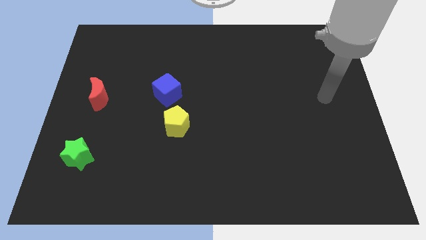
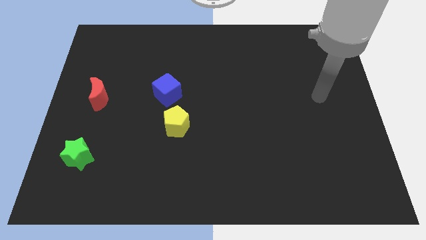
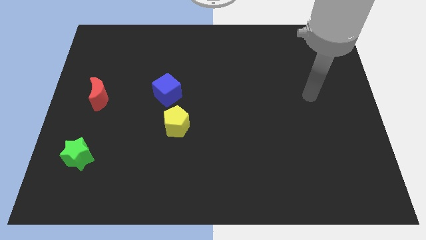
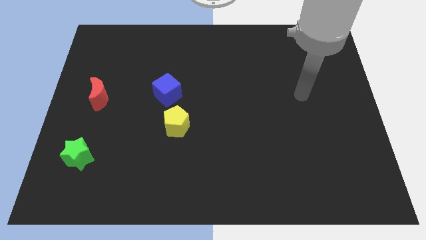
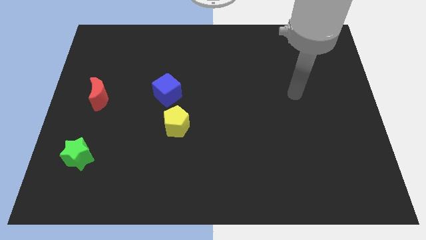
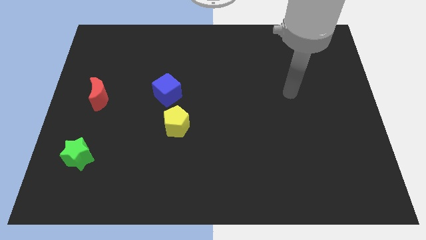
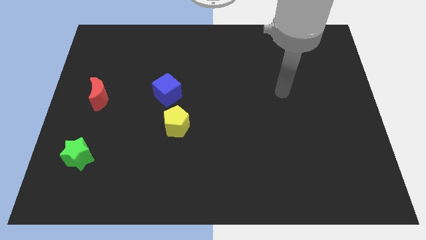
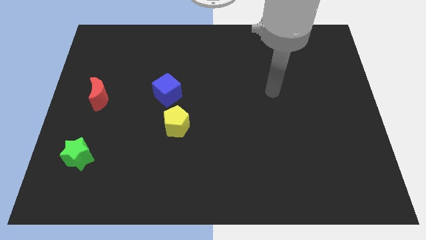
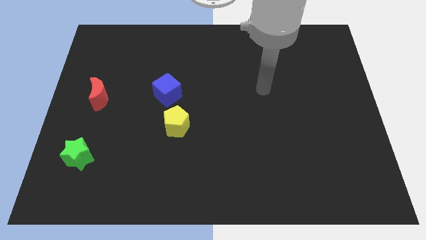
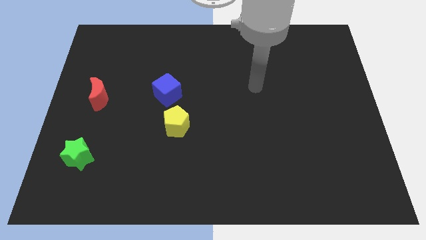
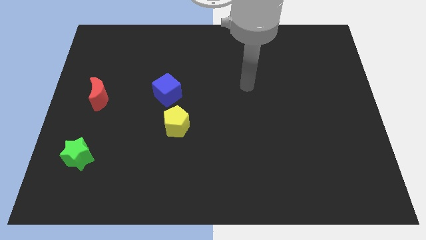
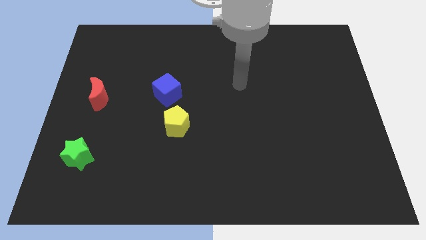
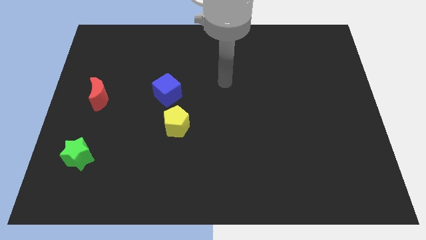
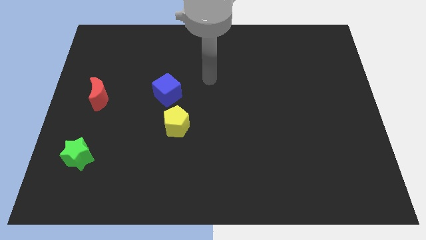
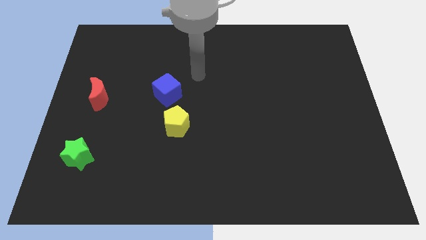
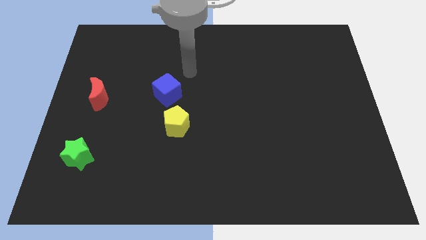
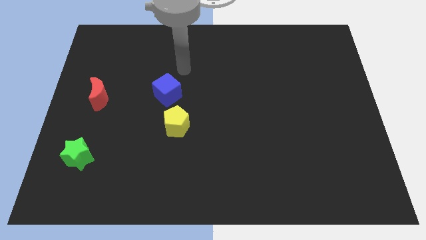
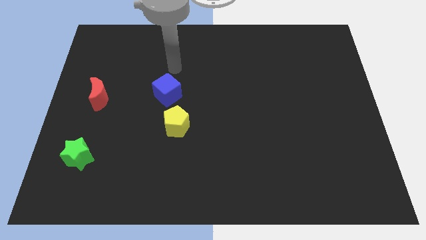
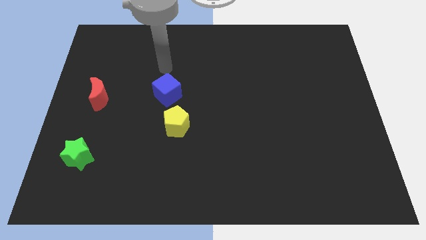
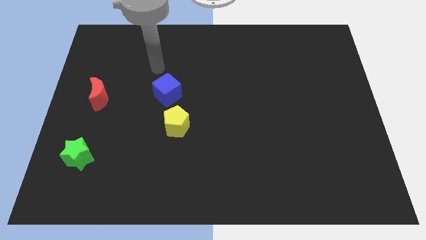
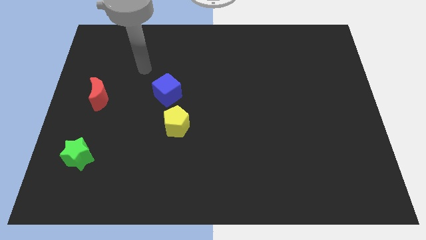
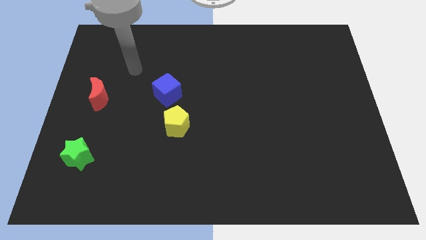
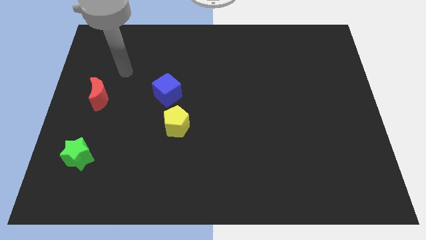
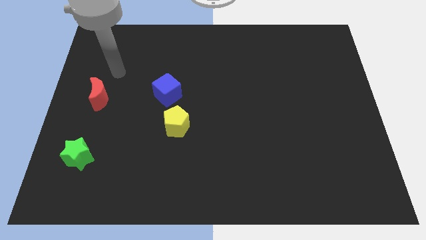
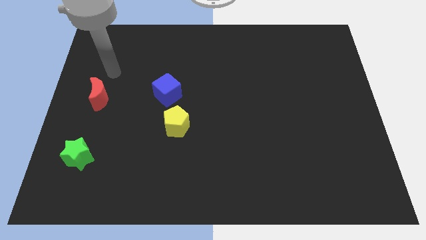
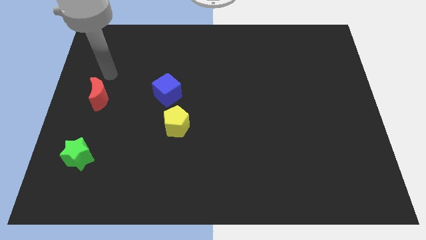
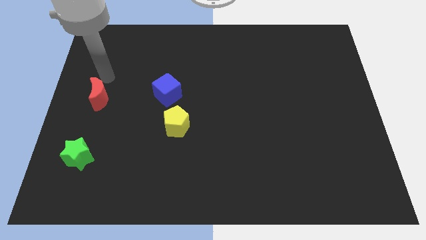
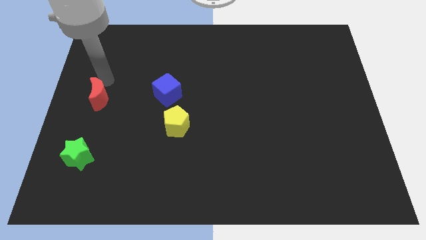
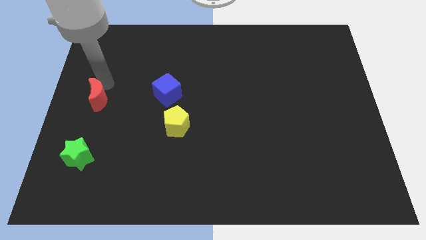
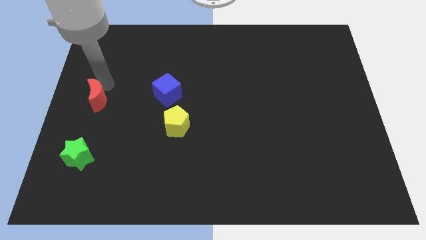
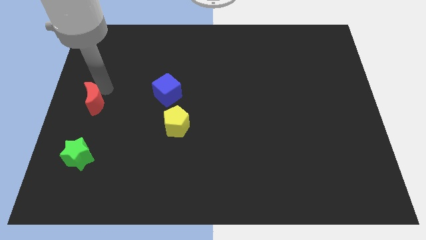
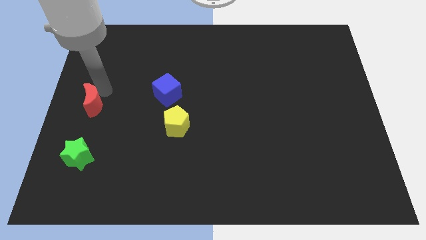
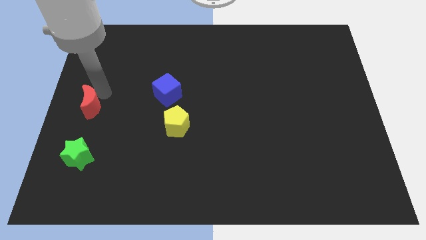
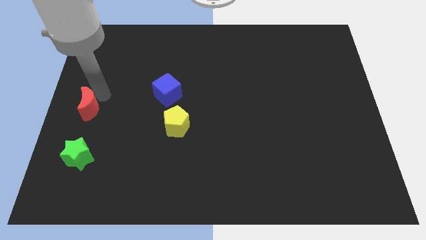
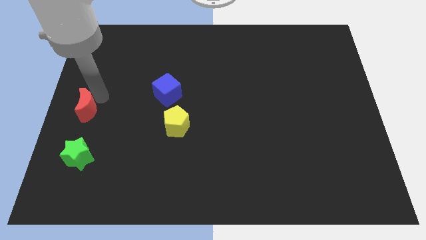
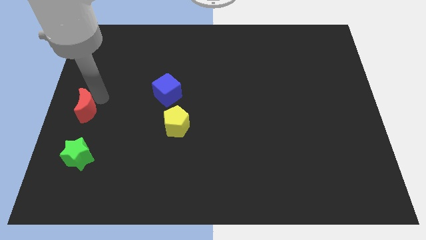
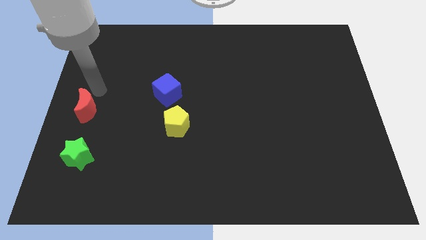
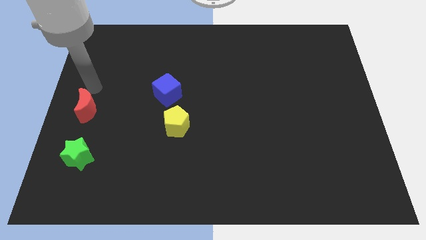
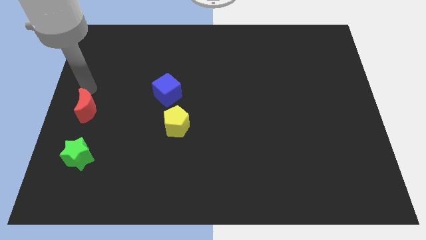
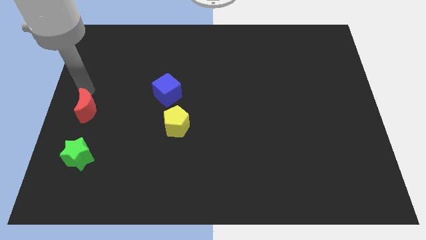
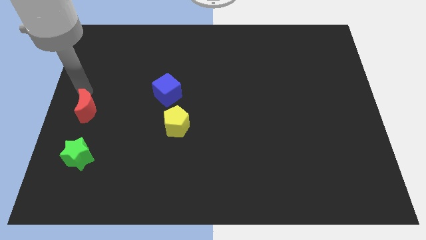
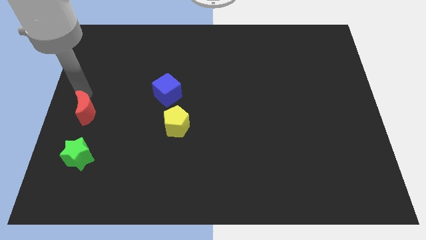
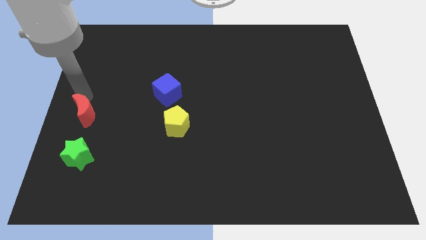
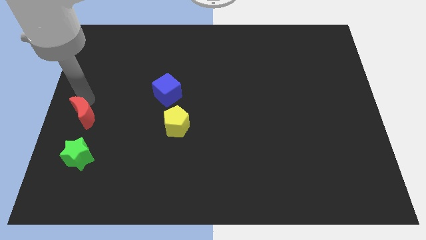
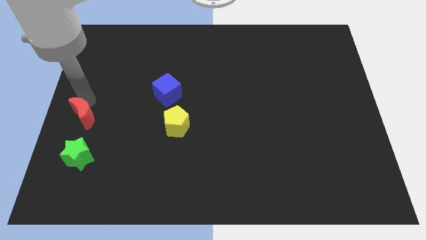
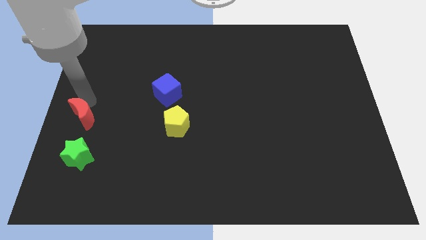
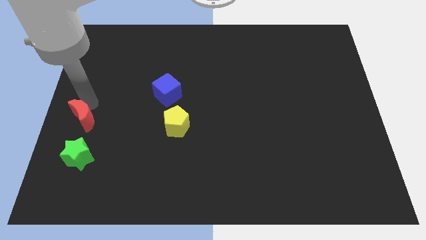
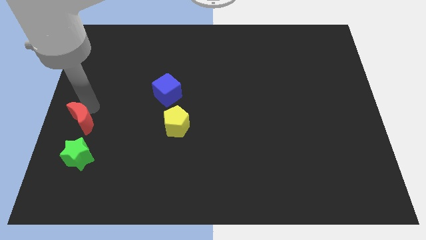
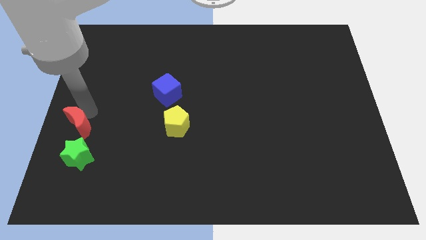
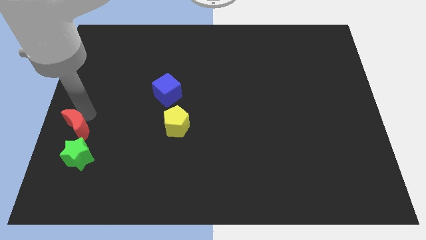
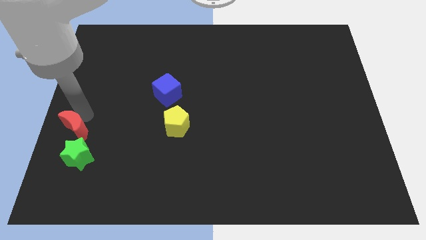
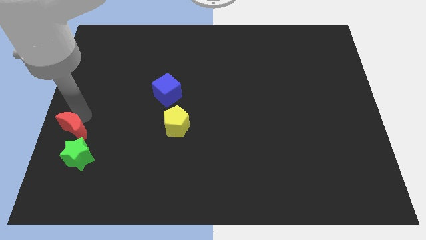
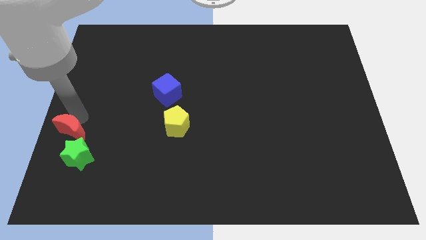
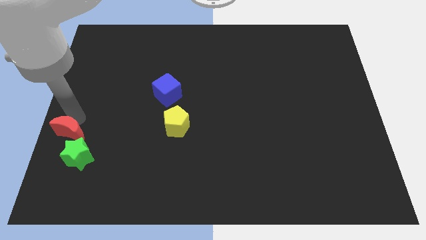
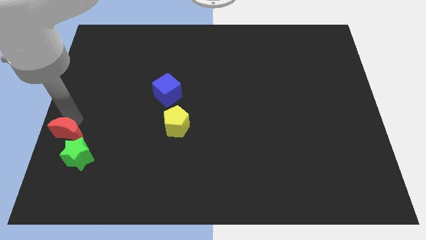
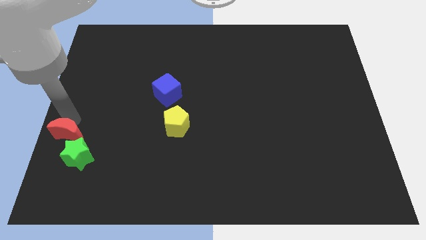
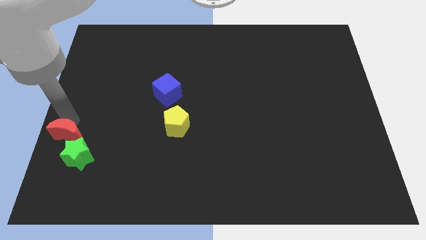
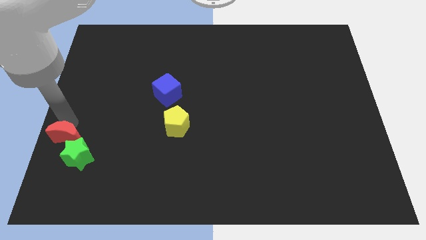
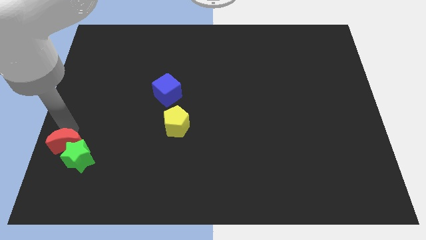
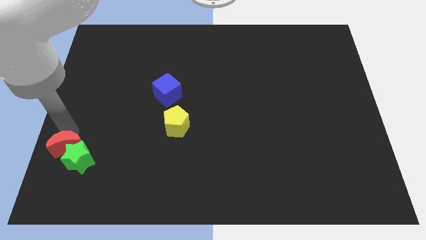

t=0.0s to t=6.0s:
push the red moon to the green block

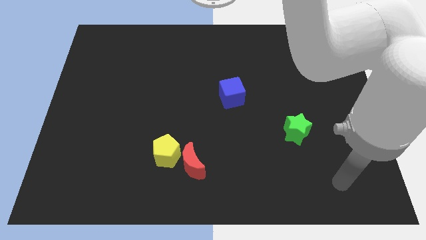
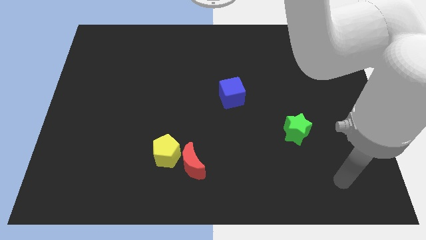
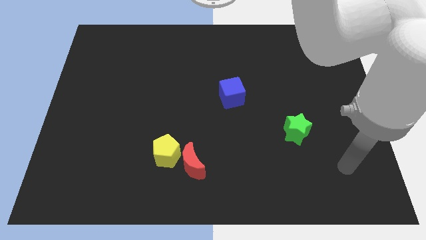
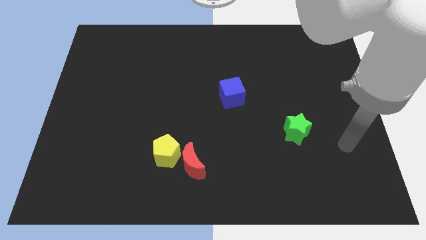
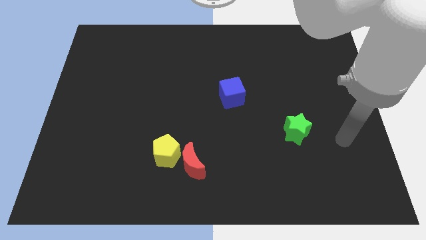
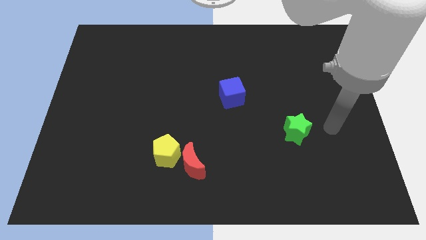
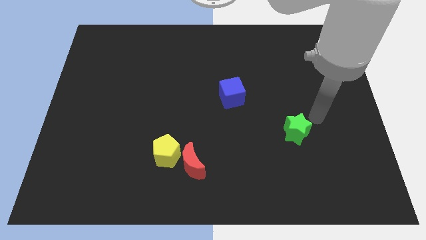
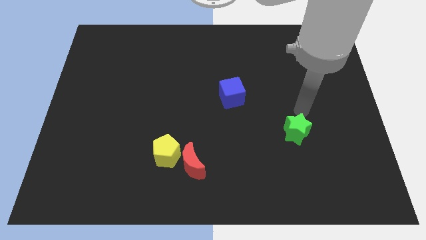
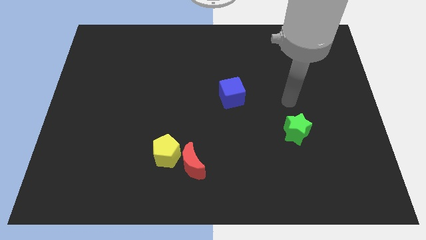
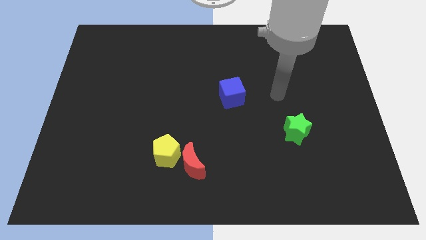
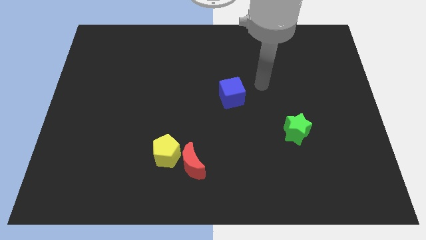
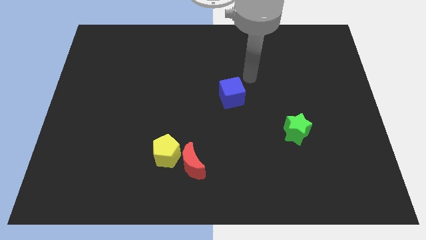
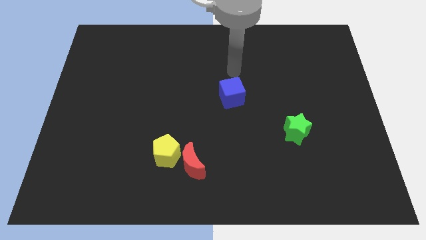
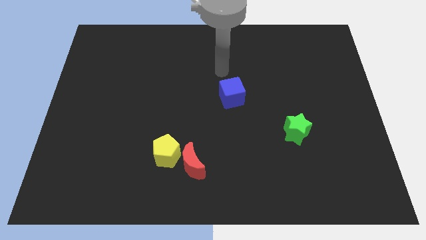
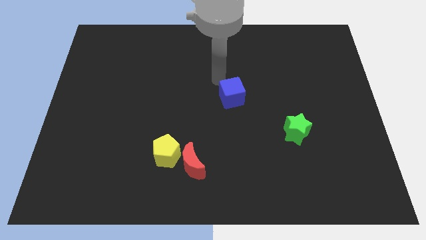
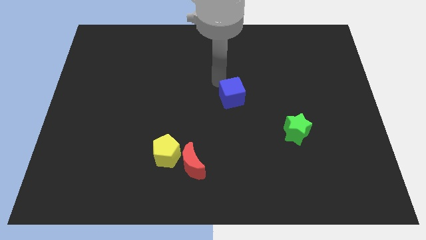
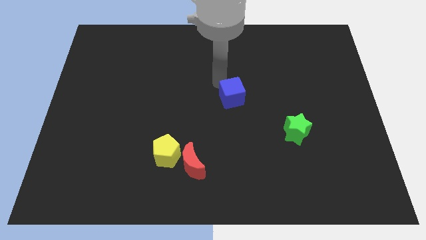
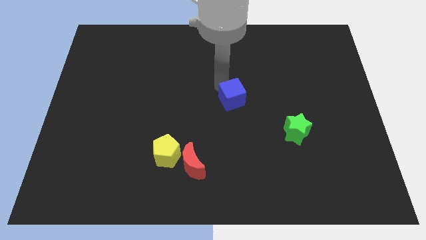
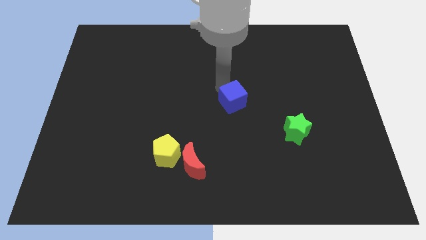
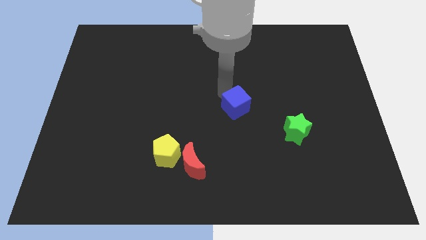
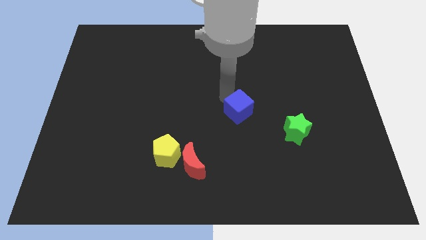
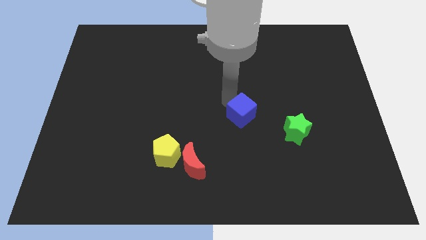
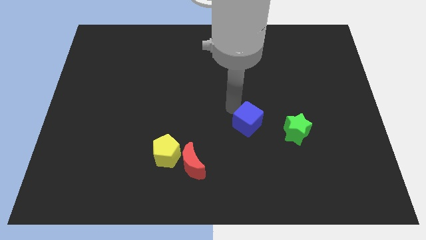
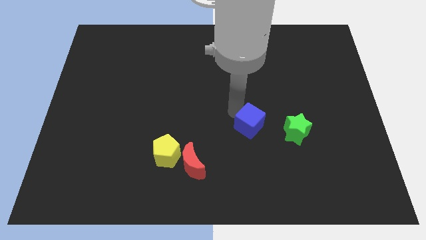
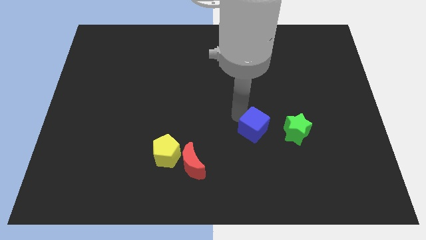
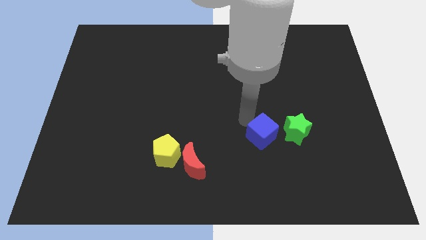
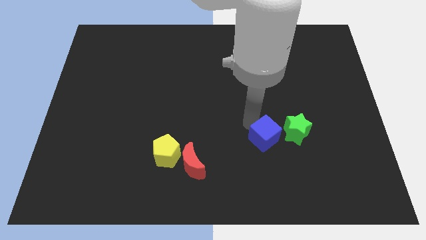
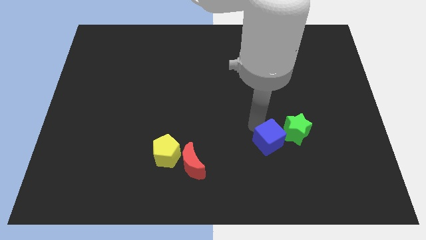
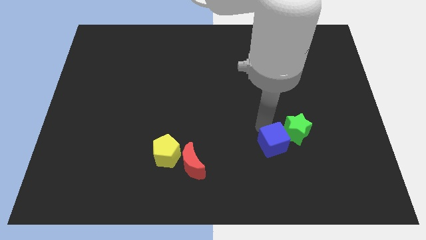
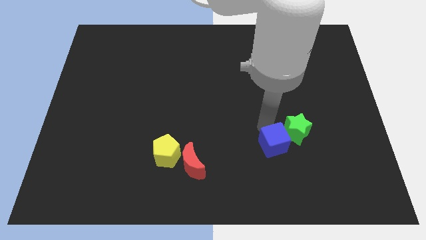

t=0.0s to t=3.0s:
push the blue cube towards the green block
